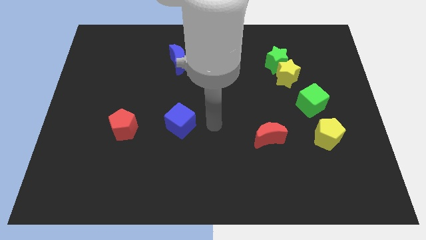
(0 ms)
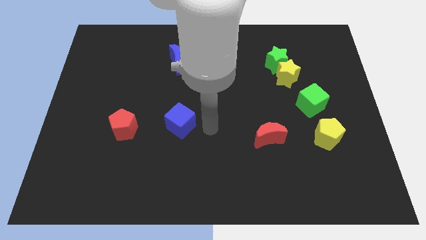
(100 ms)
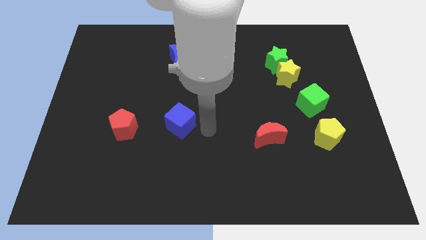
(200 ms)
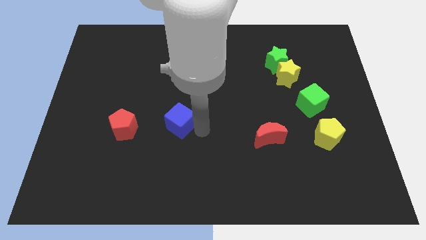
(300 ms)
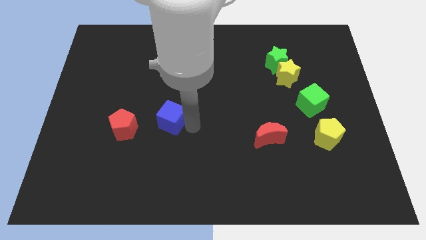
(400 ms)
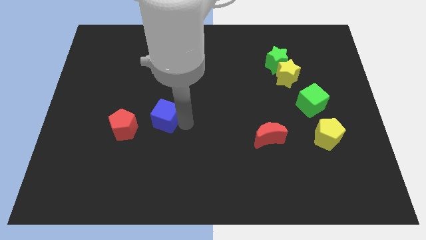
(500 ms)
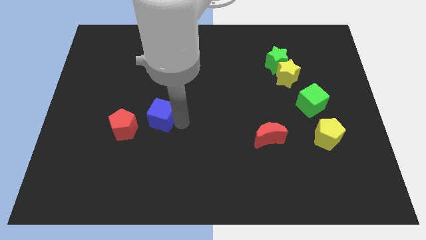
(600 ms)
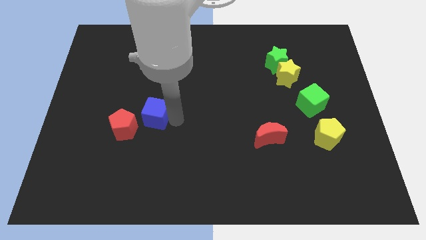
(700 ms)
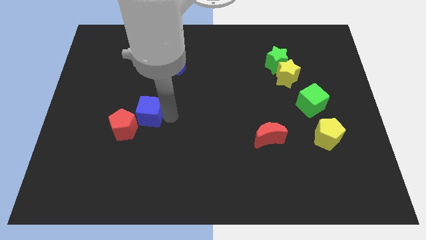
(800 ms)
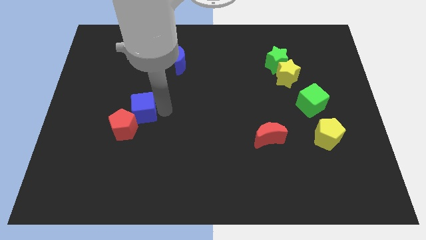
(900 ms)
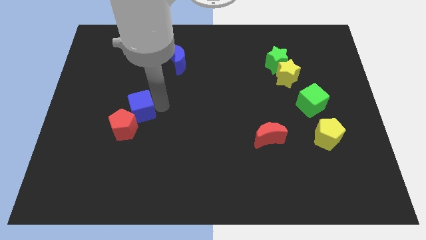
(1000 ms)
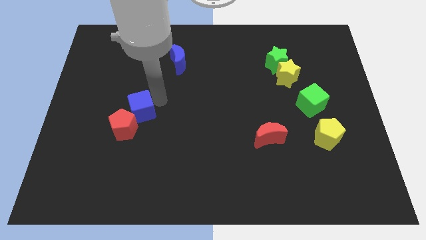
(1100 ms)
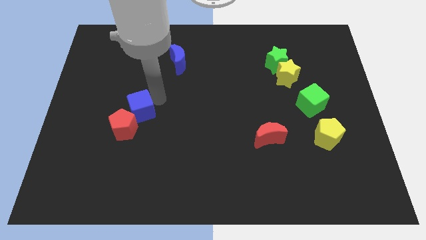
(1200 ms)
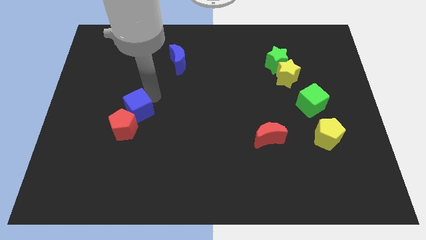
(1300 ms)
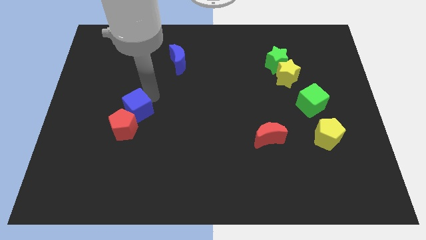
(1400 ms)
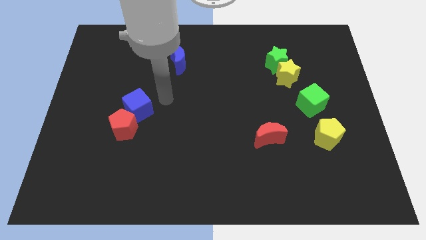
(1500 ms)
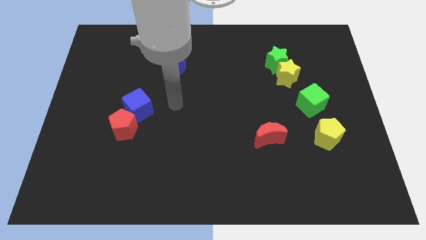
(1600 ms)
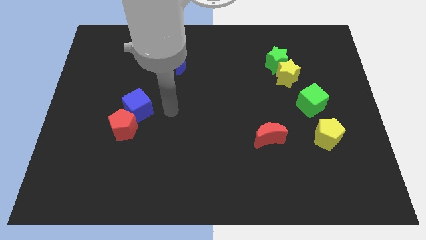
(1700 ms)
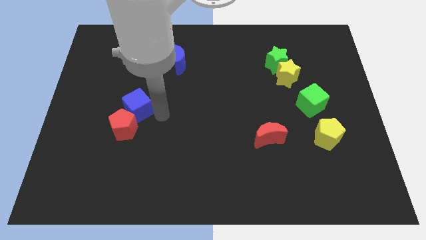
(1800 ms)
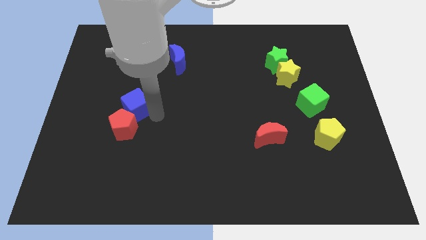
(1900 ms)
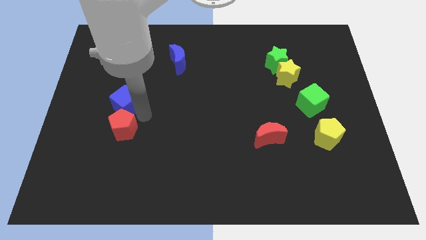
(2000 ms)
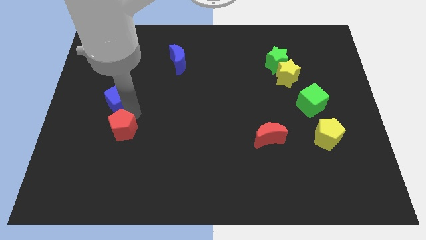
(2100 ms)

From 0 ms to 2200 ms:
push the blue cube to the top side of the red pentagon

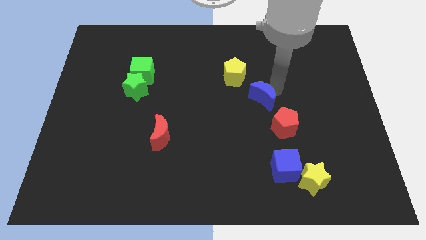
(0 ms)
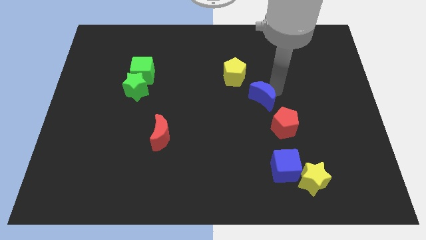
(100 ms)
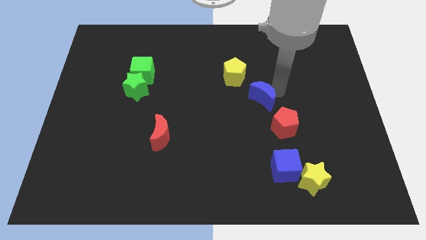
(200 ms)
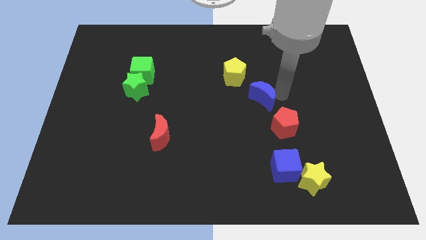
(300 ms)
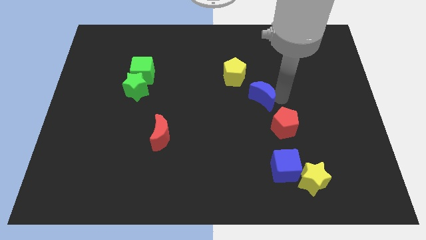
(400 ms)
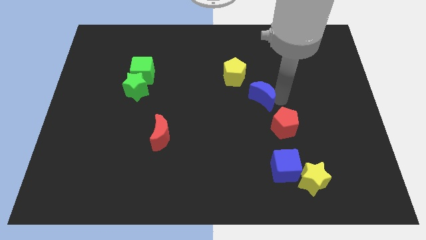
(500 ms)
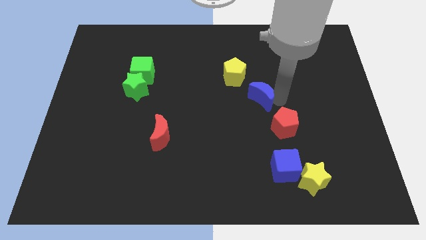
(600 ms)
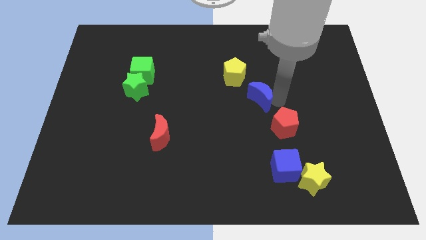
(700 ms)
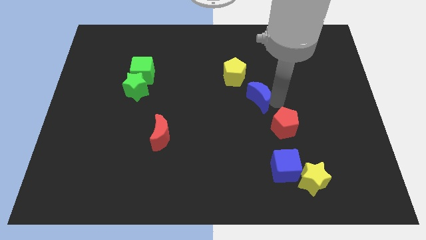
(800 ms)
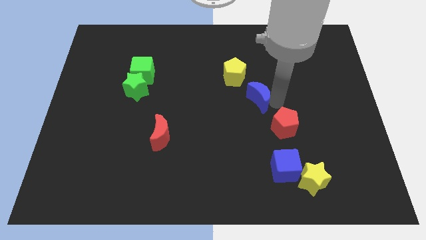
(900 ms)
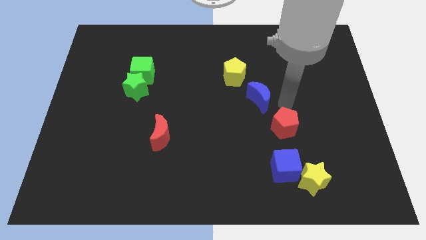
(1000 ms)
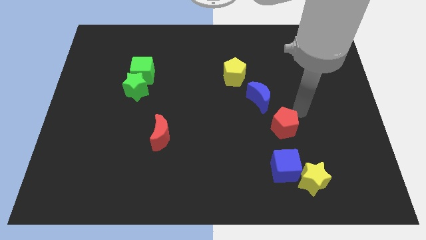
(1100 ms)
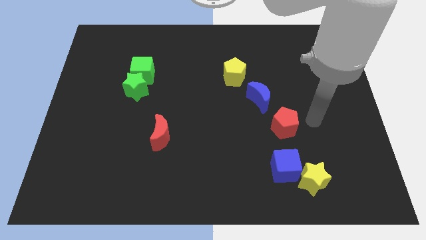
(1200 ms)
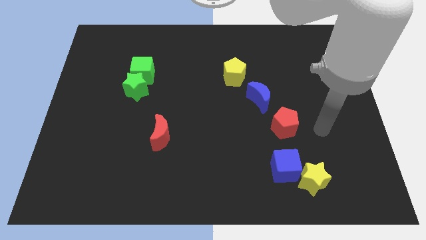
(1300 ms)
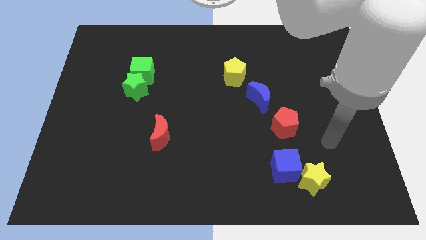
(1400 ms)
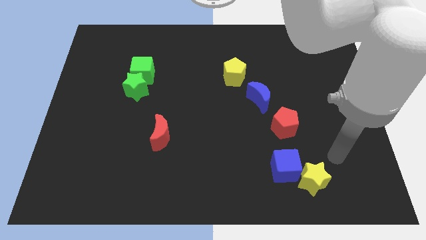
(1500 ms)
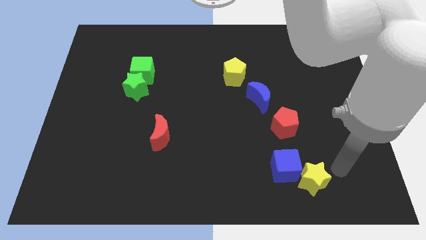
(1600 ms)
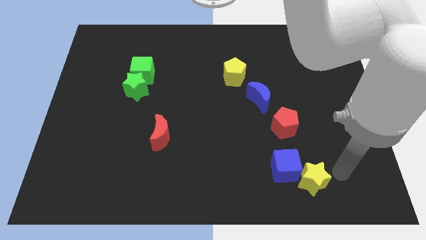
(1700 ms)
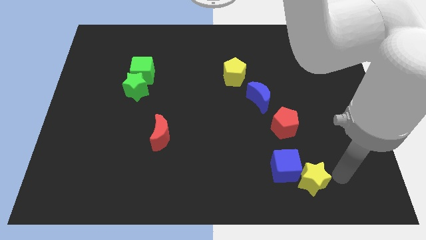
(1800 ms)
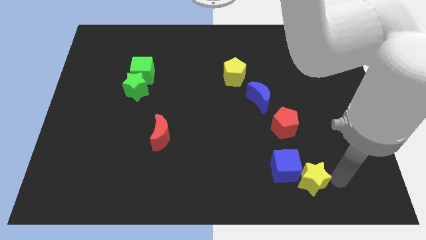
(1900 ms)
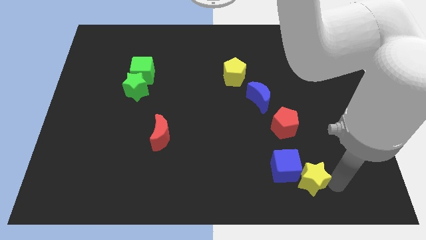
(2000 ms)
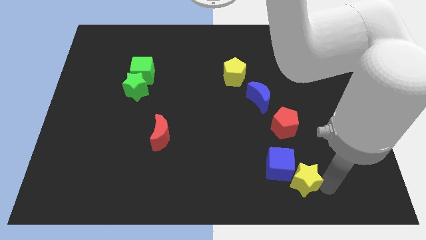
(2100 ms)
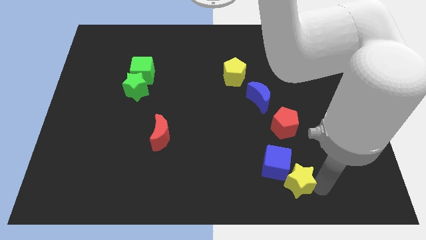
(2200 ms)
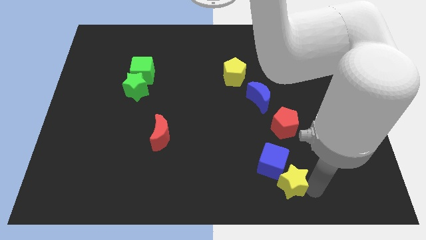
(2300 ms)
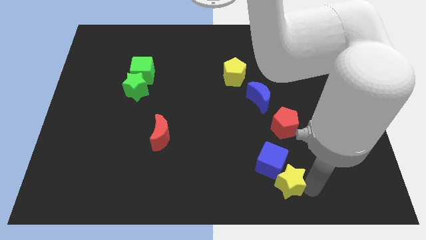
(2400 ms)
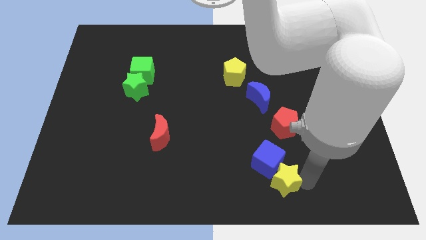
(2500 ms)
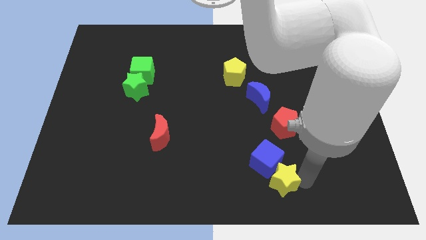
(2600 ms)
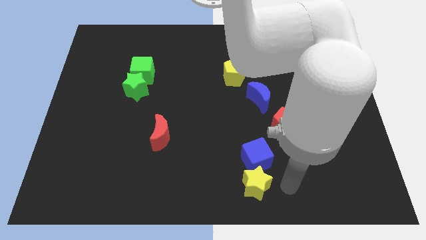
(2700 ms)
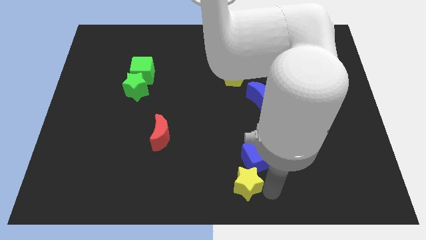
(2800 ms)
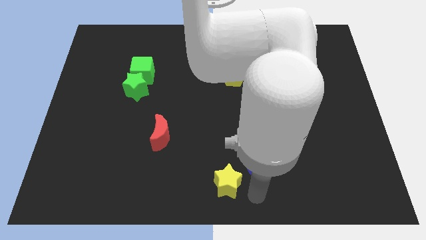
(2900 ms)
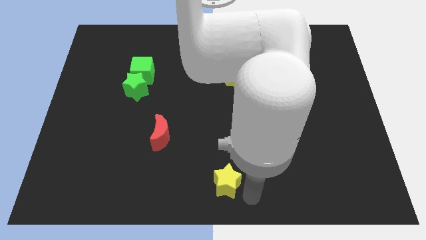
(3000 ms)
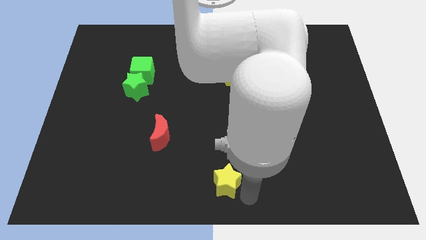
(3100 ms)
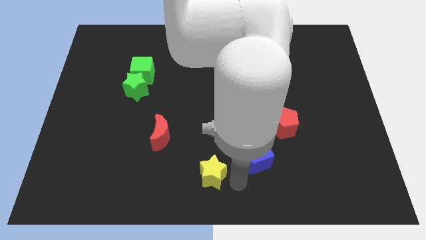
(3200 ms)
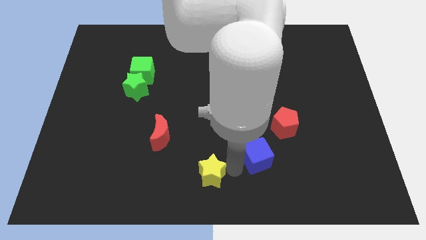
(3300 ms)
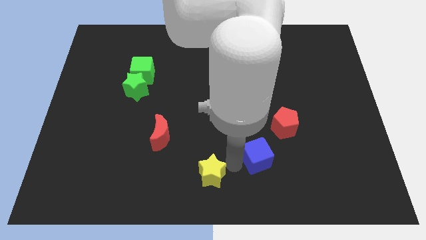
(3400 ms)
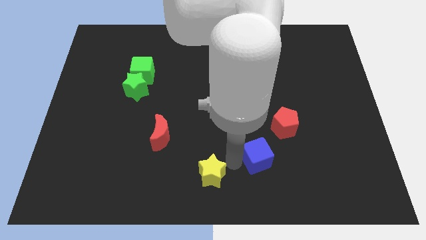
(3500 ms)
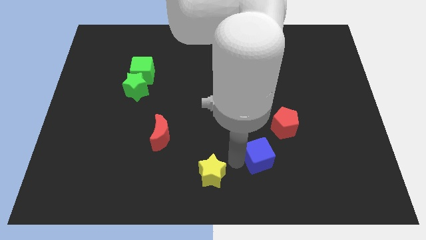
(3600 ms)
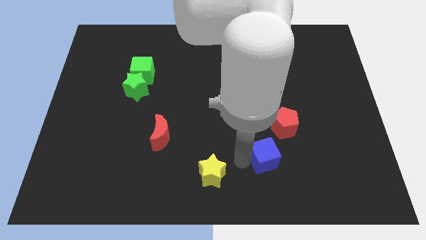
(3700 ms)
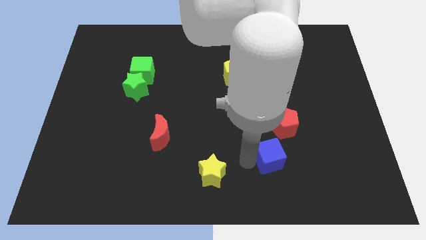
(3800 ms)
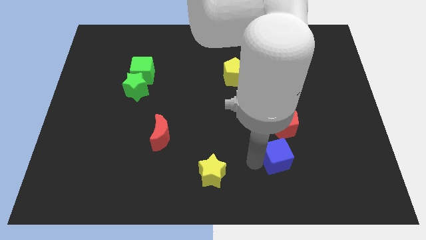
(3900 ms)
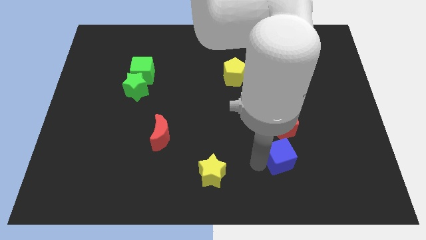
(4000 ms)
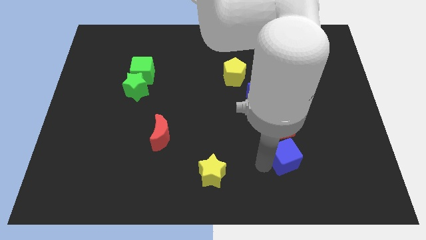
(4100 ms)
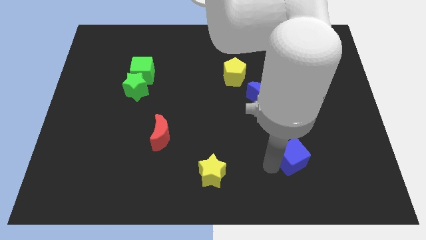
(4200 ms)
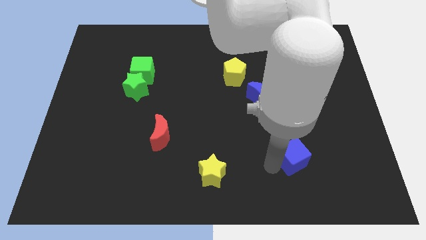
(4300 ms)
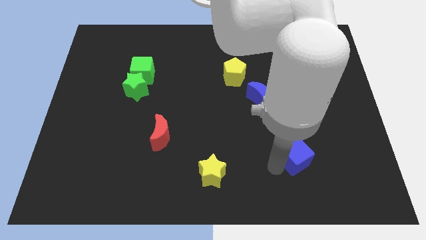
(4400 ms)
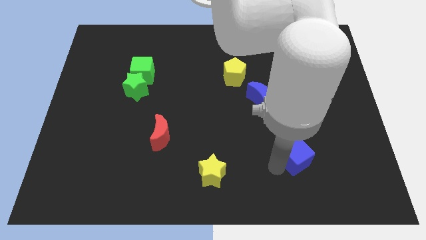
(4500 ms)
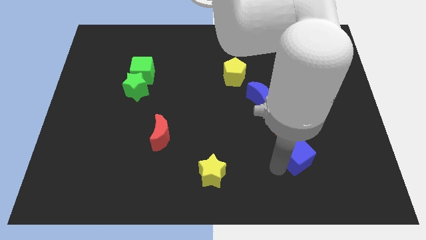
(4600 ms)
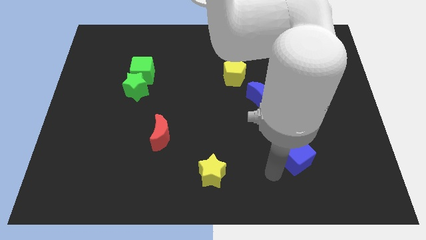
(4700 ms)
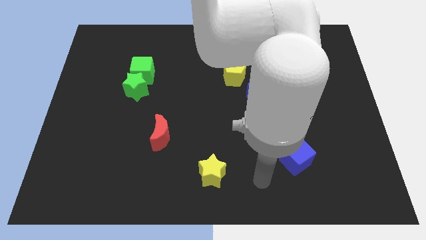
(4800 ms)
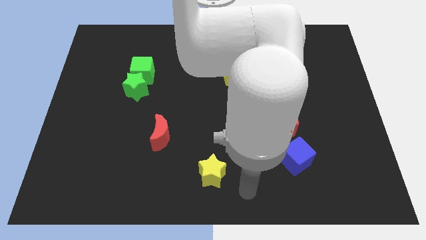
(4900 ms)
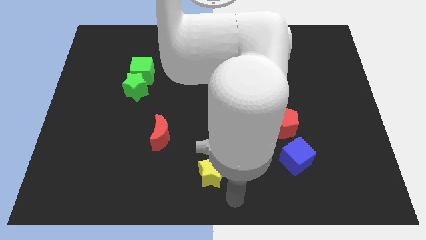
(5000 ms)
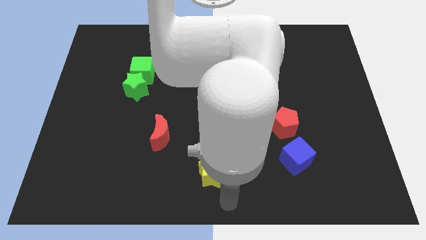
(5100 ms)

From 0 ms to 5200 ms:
place the blue cube underneath the red pentagon

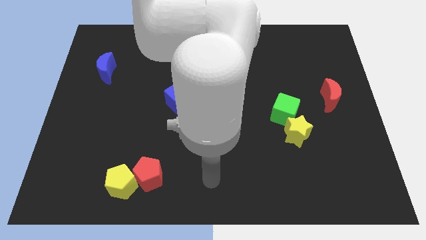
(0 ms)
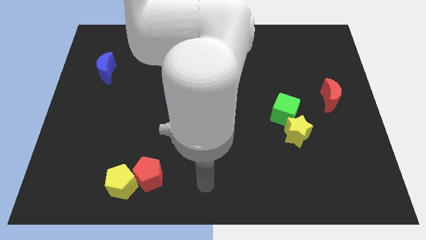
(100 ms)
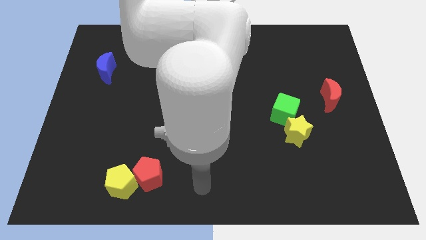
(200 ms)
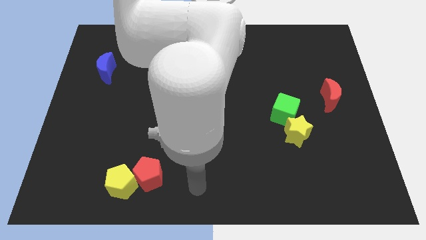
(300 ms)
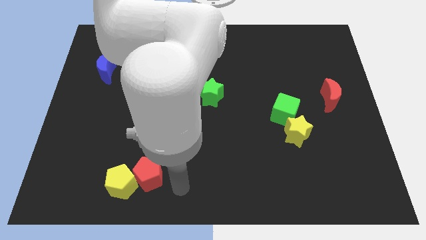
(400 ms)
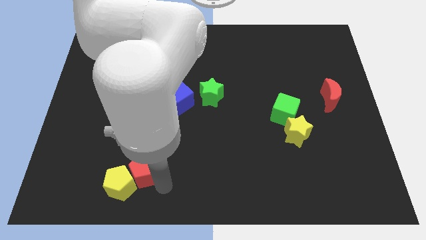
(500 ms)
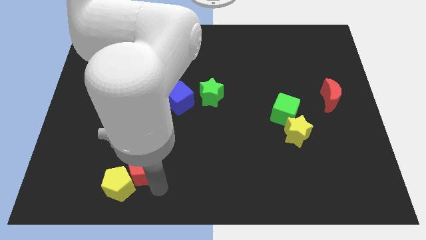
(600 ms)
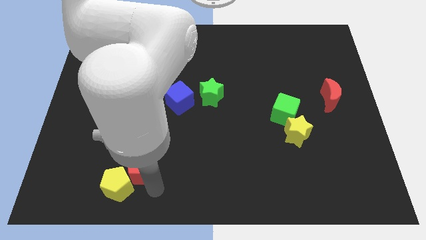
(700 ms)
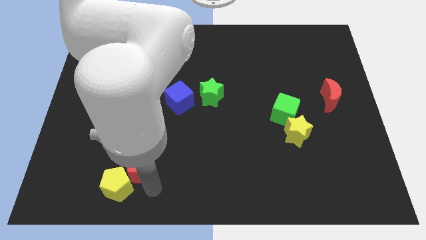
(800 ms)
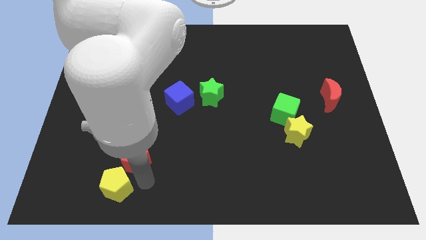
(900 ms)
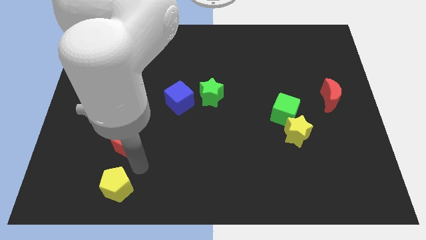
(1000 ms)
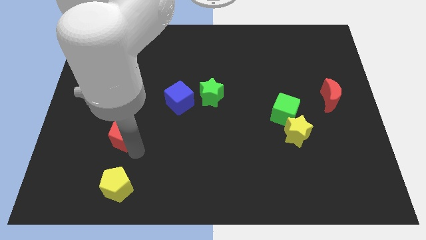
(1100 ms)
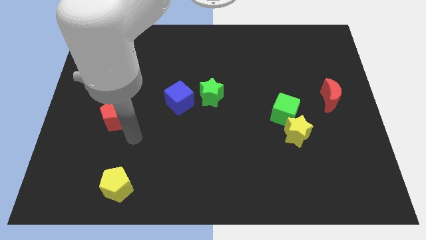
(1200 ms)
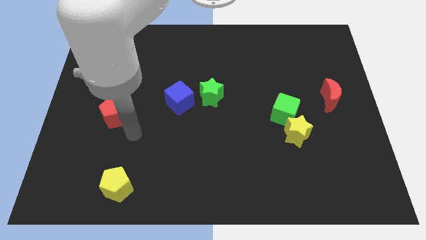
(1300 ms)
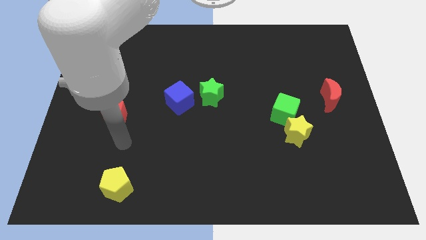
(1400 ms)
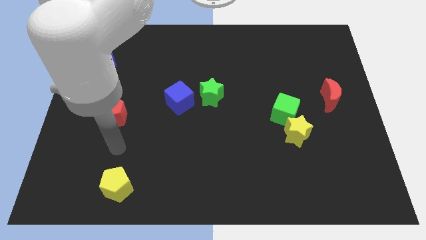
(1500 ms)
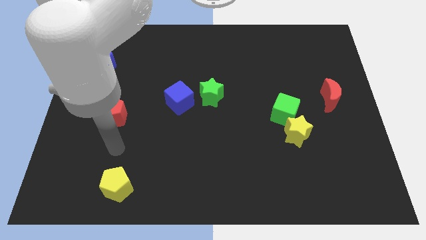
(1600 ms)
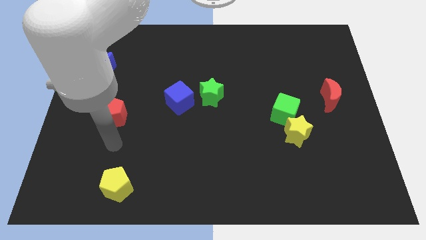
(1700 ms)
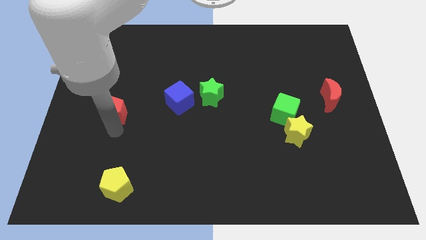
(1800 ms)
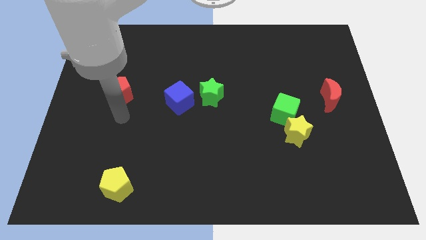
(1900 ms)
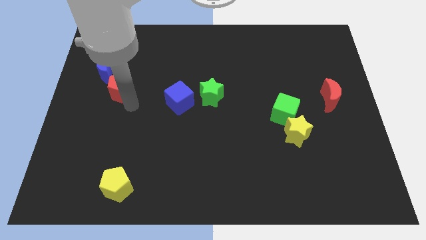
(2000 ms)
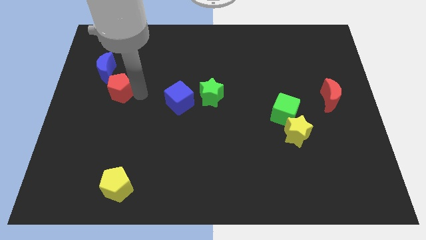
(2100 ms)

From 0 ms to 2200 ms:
push the red pentagon away from the yellow pentagon
